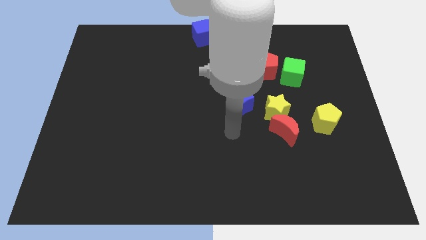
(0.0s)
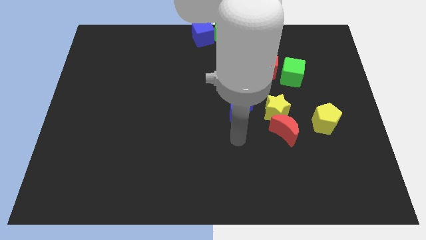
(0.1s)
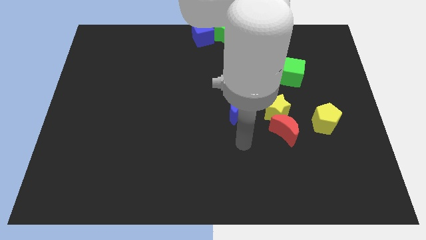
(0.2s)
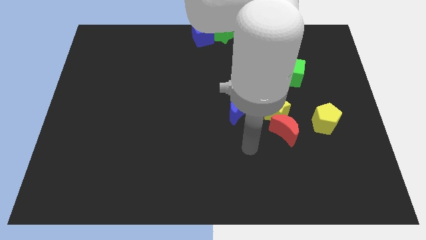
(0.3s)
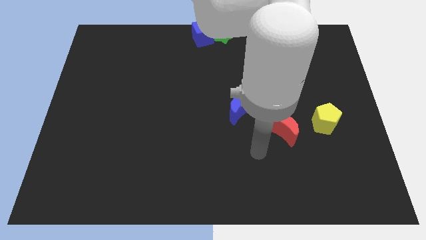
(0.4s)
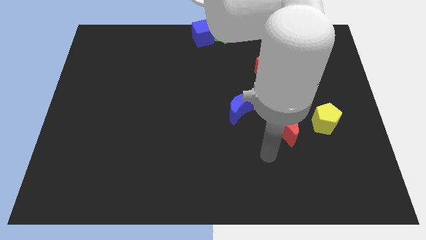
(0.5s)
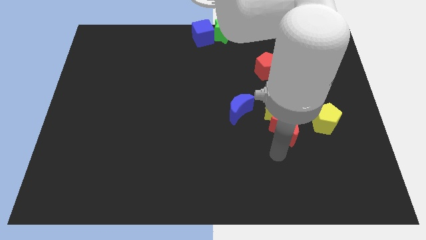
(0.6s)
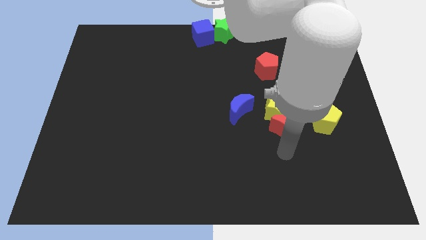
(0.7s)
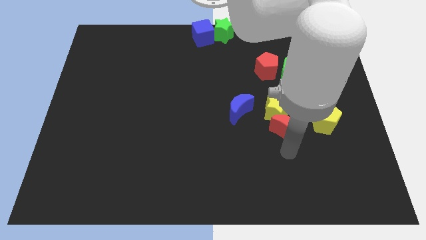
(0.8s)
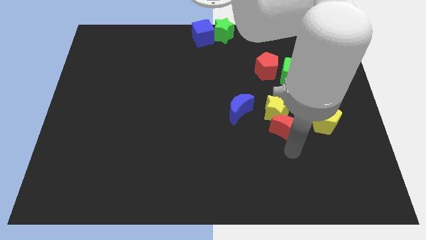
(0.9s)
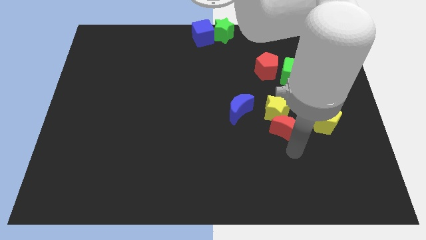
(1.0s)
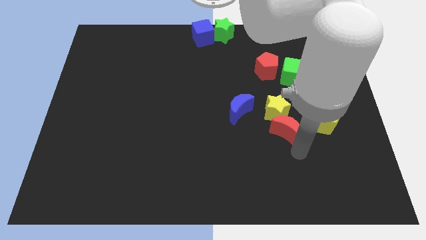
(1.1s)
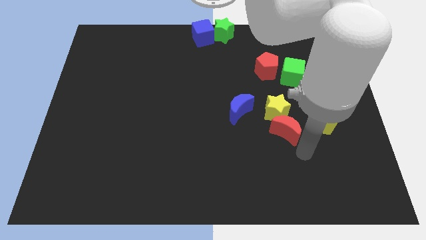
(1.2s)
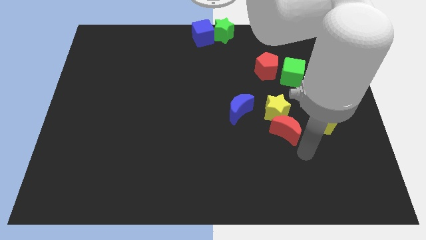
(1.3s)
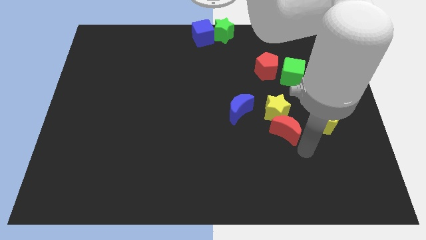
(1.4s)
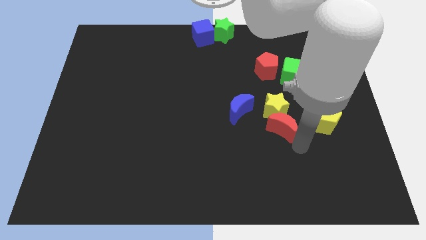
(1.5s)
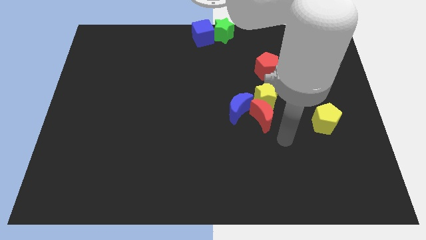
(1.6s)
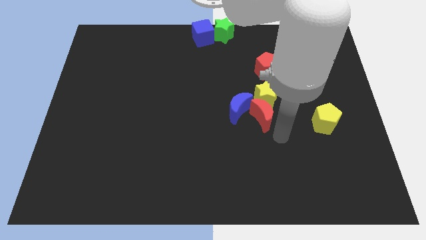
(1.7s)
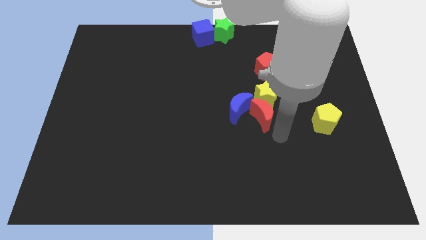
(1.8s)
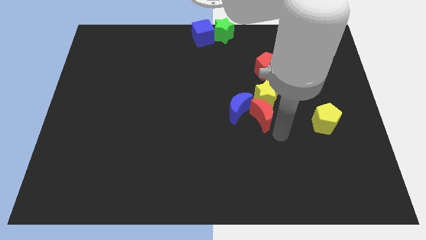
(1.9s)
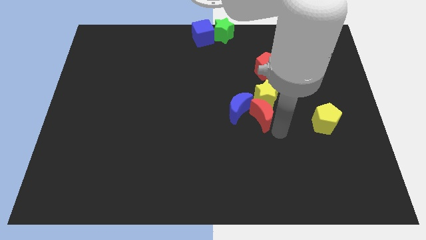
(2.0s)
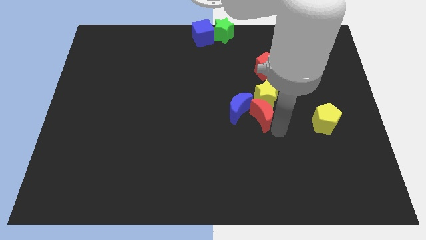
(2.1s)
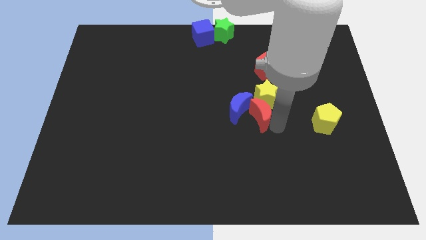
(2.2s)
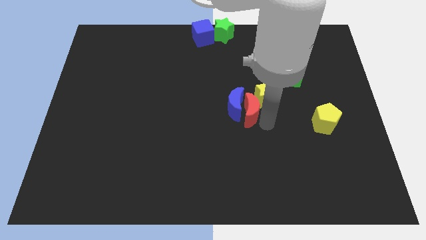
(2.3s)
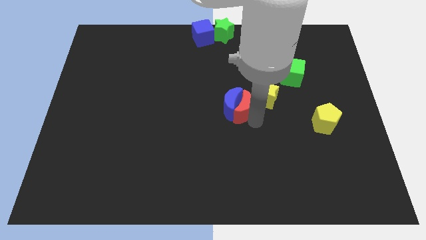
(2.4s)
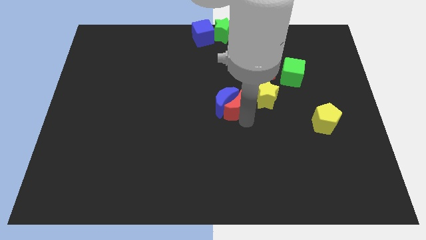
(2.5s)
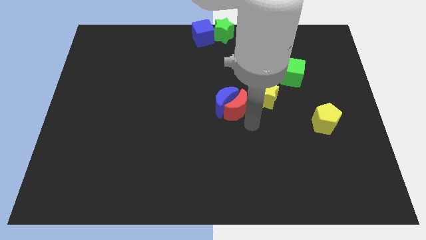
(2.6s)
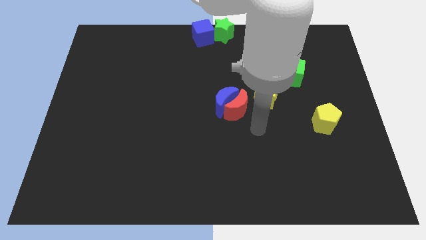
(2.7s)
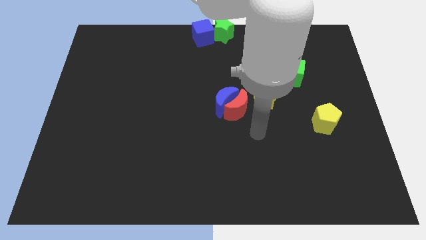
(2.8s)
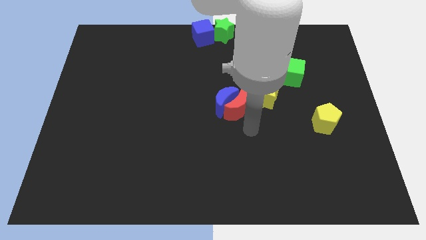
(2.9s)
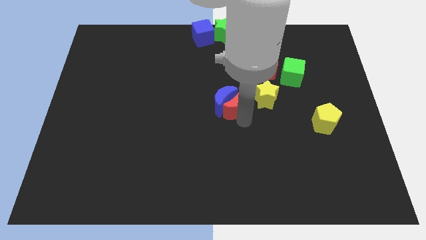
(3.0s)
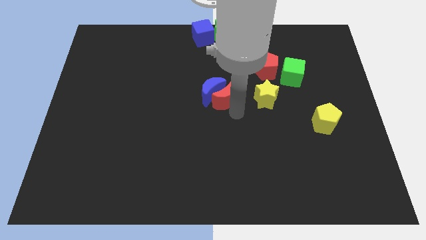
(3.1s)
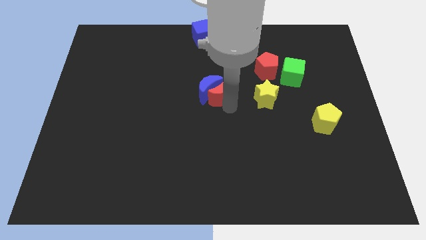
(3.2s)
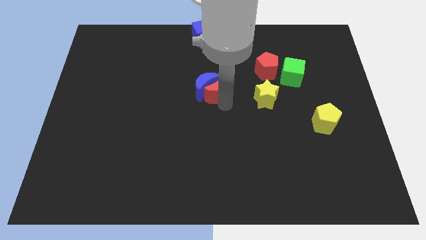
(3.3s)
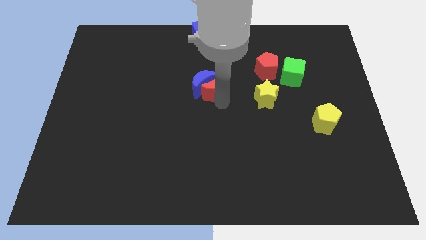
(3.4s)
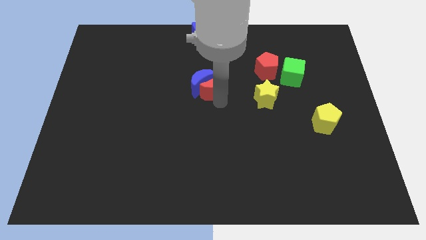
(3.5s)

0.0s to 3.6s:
push the red crescent into the blue crescent

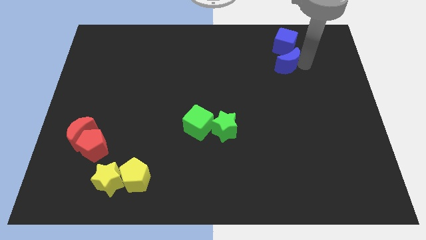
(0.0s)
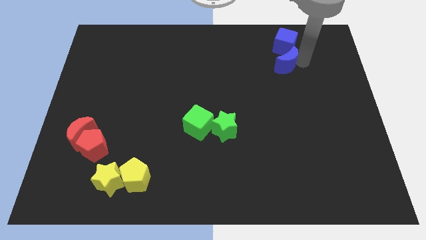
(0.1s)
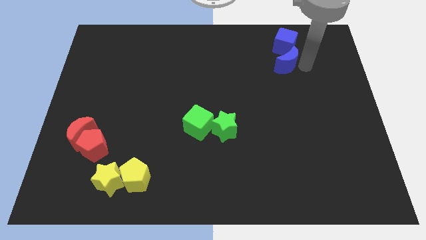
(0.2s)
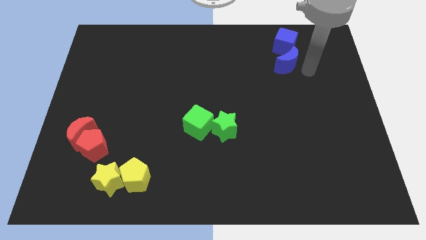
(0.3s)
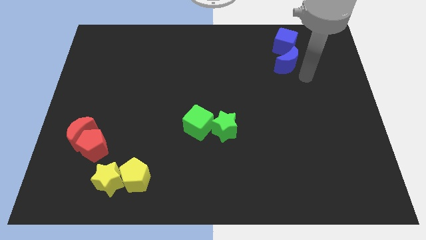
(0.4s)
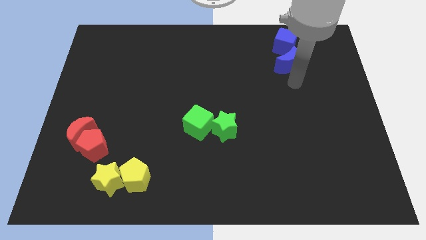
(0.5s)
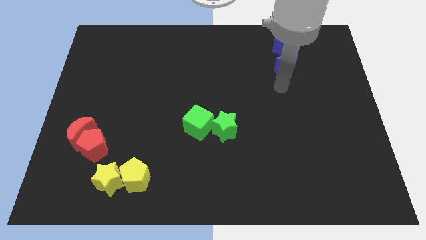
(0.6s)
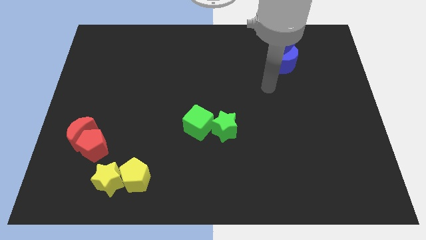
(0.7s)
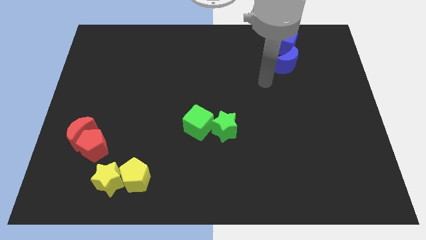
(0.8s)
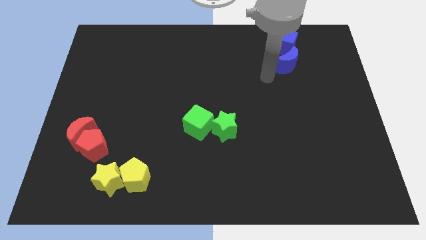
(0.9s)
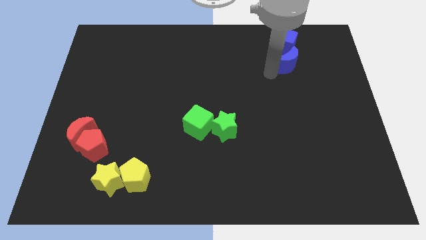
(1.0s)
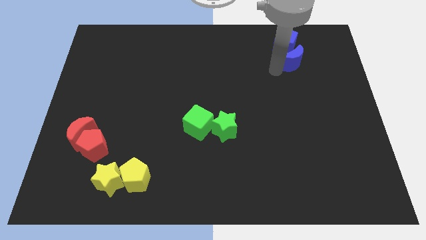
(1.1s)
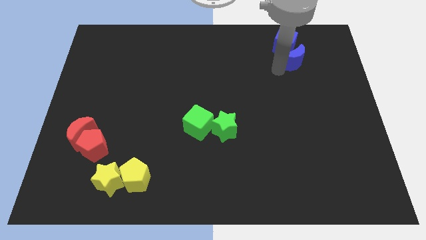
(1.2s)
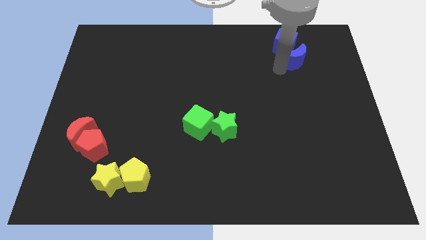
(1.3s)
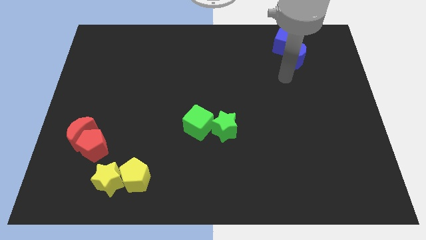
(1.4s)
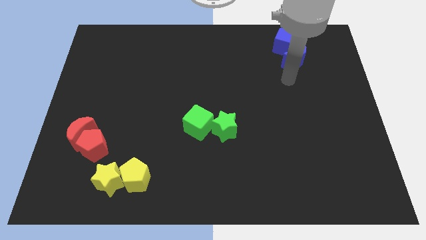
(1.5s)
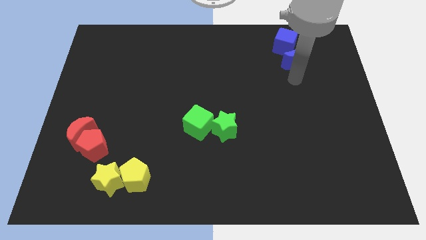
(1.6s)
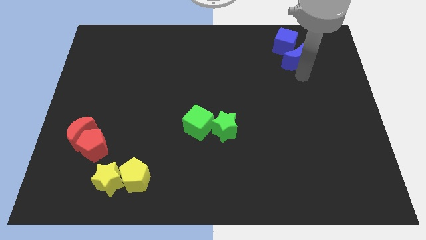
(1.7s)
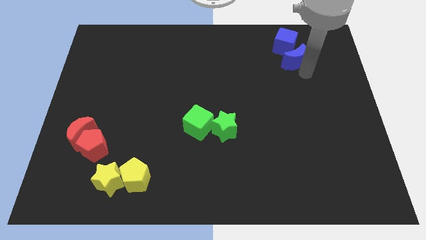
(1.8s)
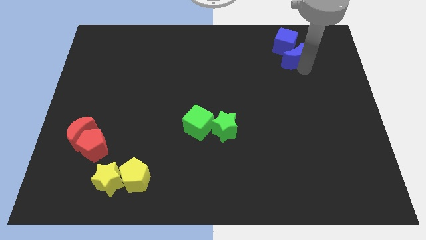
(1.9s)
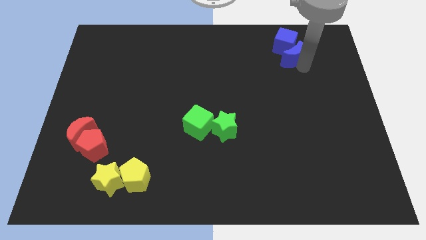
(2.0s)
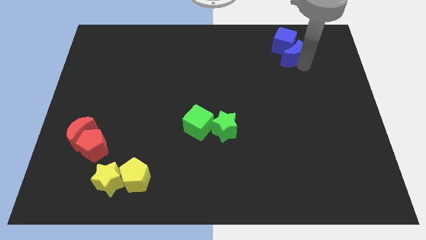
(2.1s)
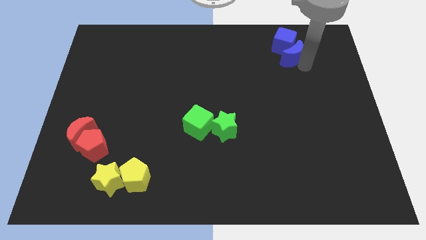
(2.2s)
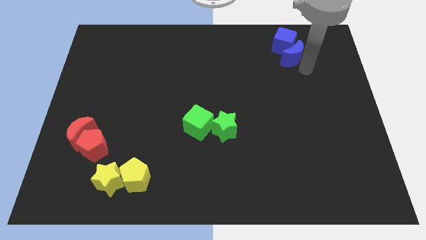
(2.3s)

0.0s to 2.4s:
push blue crescent towards blue cube

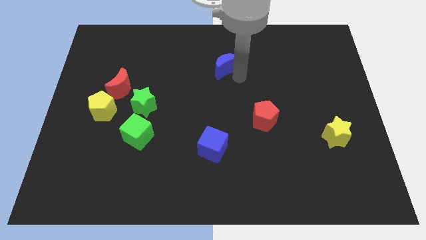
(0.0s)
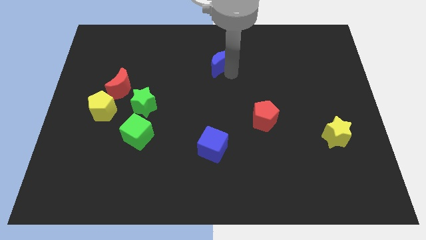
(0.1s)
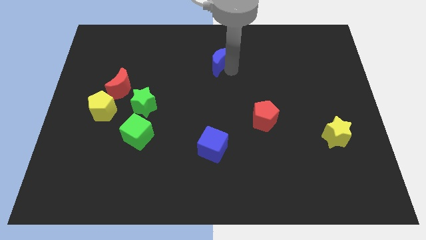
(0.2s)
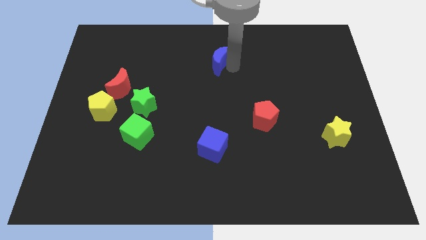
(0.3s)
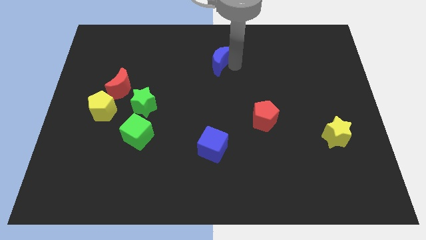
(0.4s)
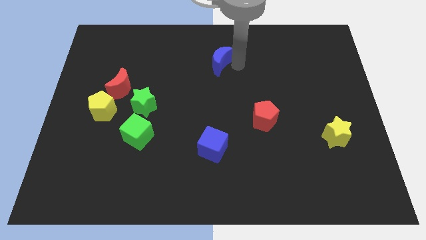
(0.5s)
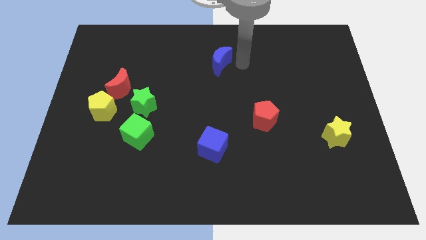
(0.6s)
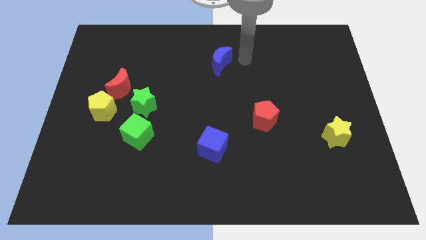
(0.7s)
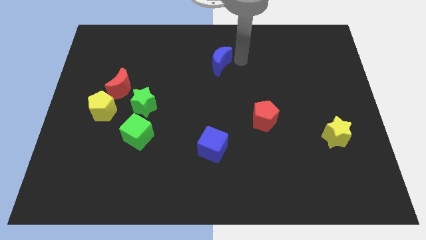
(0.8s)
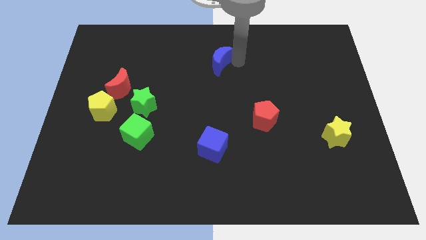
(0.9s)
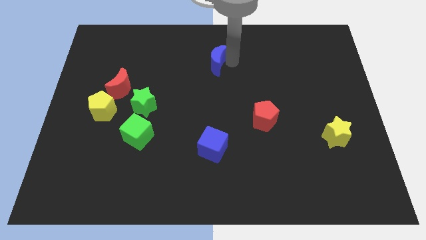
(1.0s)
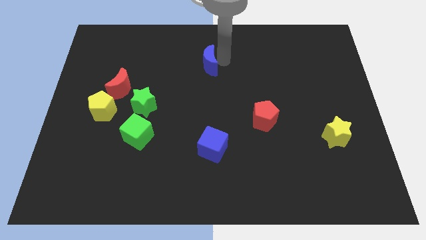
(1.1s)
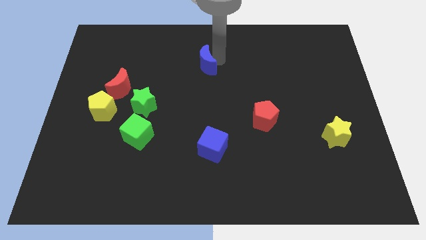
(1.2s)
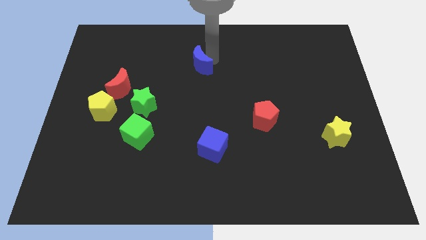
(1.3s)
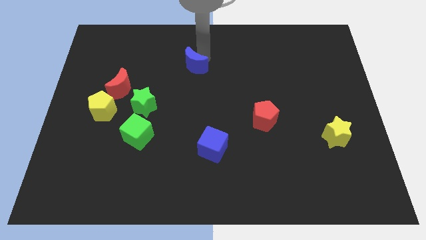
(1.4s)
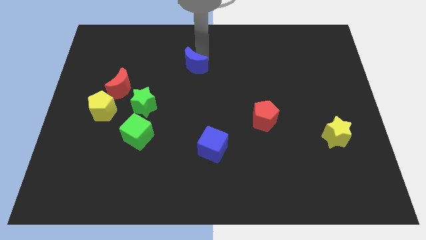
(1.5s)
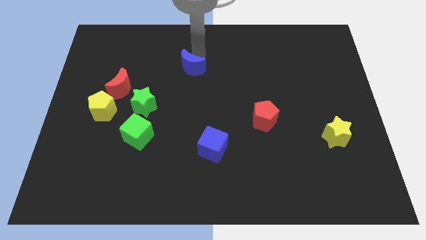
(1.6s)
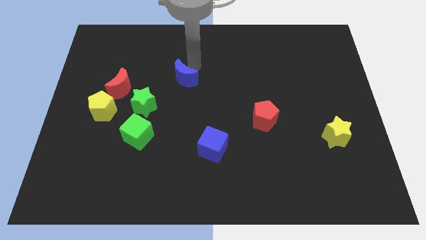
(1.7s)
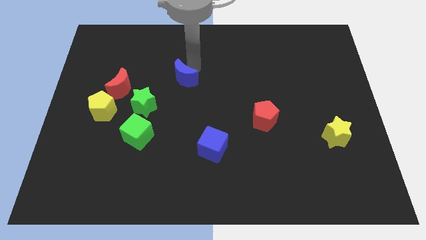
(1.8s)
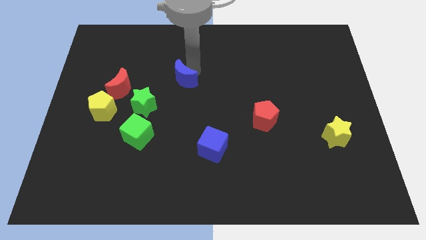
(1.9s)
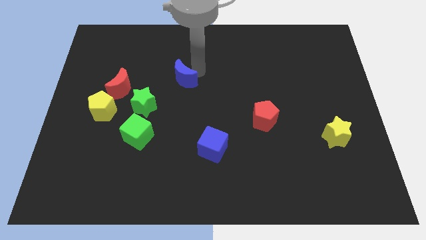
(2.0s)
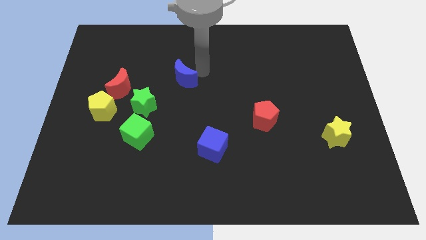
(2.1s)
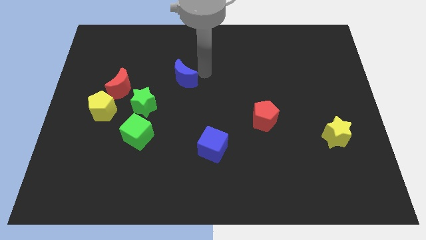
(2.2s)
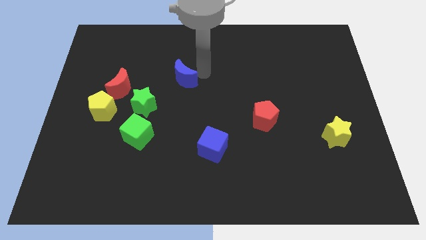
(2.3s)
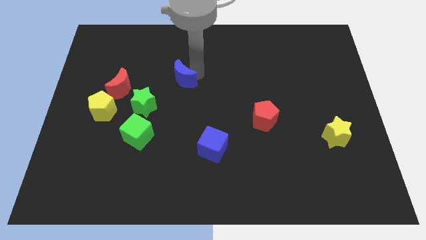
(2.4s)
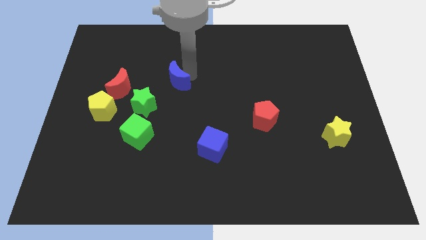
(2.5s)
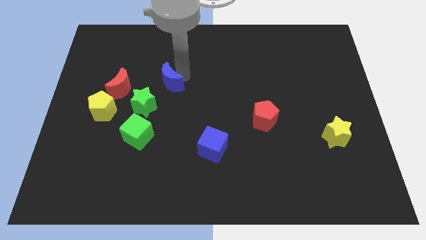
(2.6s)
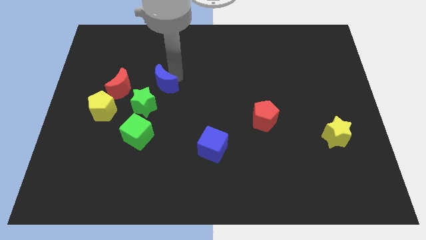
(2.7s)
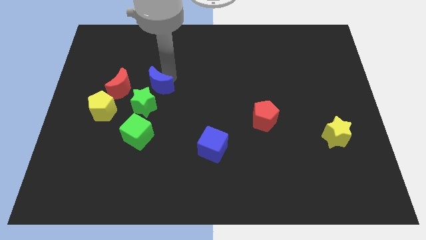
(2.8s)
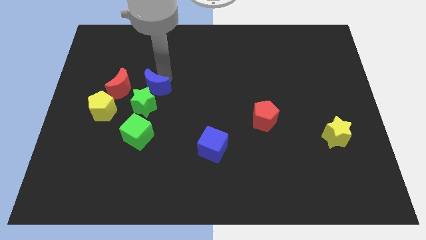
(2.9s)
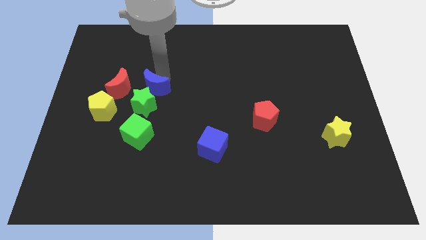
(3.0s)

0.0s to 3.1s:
push blue moon towards green star
